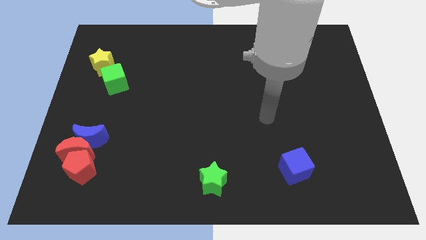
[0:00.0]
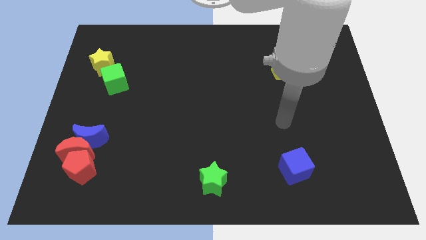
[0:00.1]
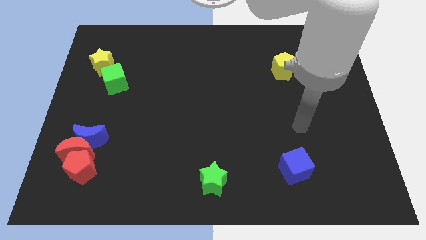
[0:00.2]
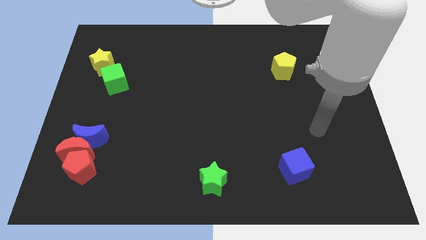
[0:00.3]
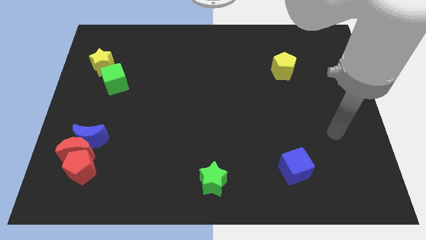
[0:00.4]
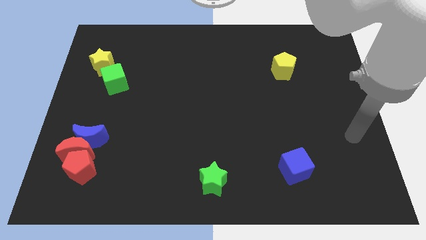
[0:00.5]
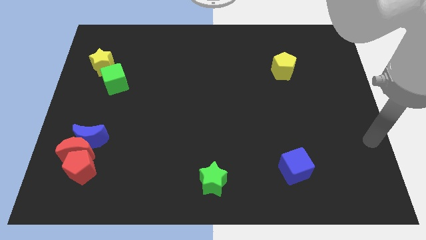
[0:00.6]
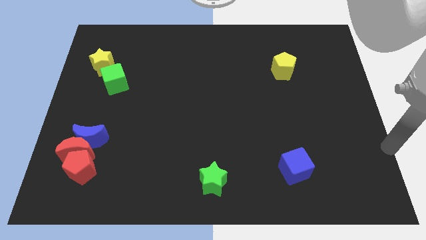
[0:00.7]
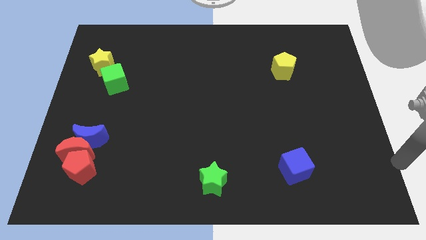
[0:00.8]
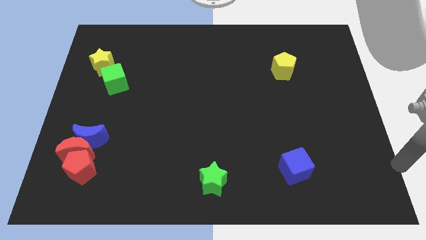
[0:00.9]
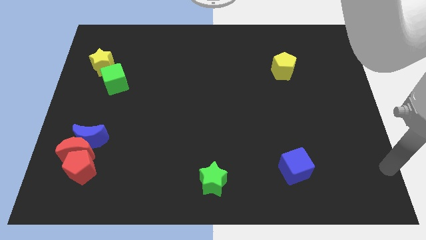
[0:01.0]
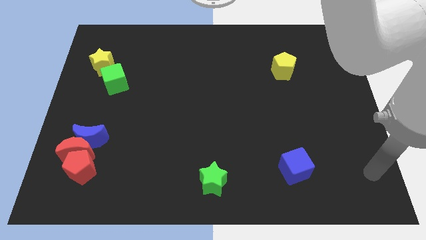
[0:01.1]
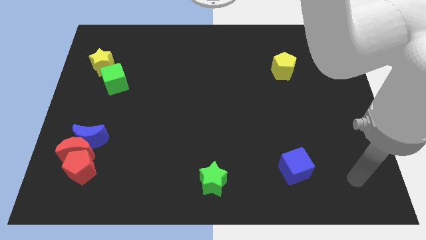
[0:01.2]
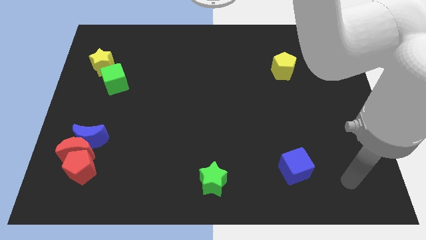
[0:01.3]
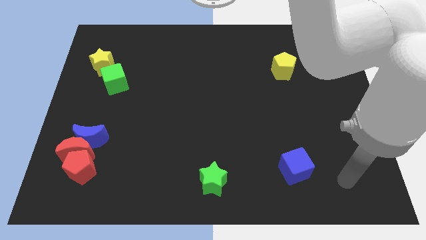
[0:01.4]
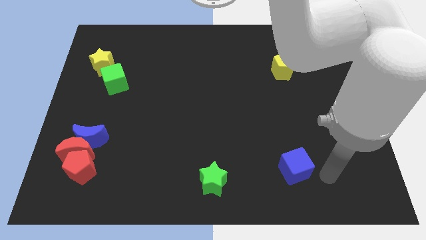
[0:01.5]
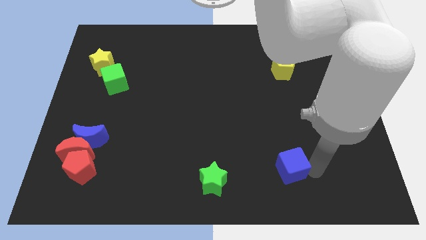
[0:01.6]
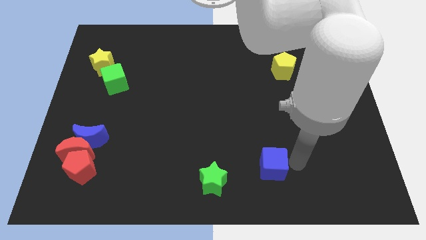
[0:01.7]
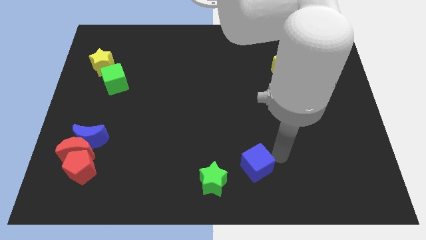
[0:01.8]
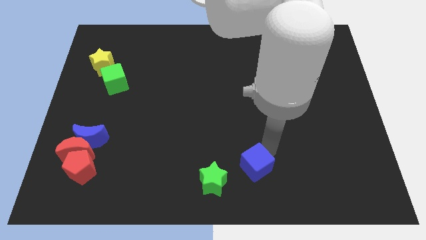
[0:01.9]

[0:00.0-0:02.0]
push the blue cube towards left

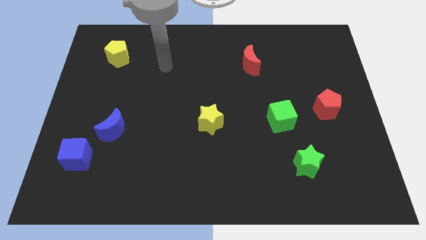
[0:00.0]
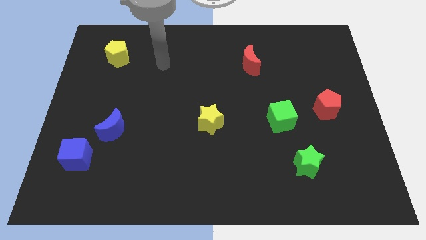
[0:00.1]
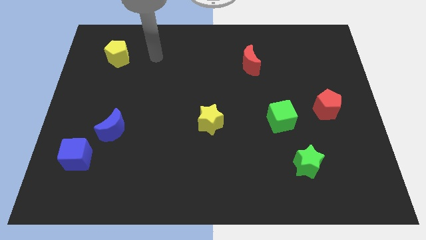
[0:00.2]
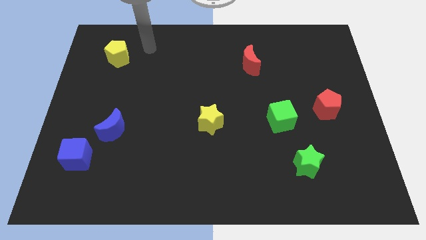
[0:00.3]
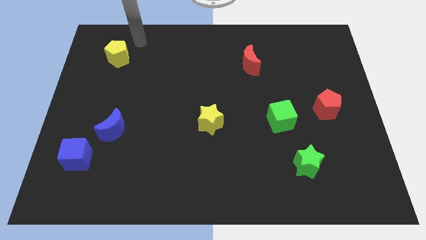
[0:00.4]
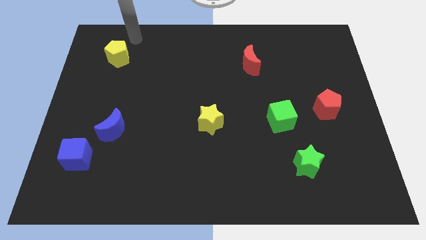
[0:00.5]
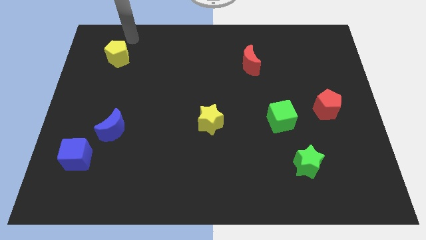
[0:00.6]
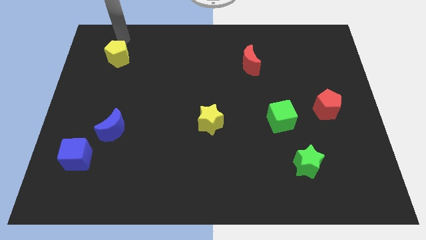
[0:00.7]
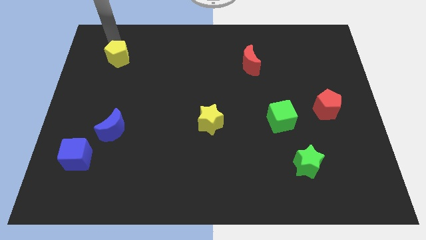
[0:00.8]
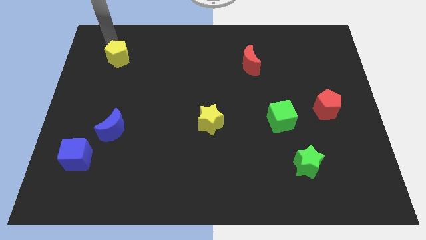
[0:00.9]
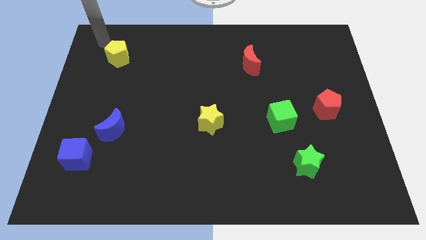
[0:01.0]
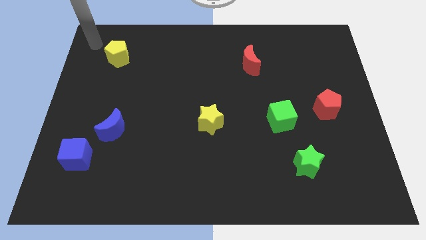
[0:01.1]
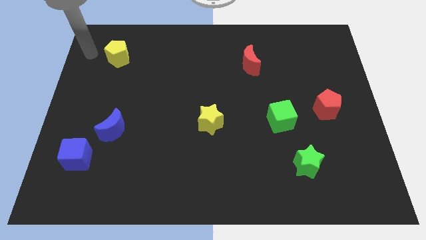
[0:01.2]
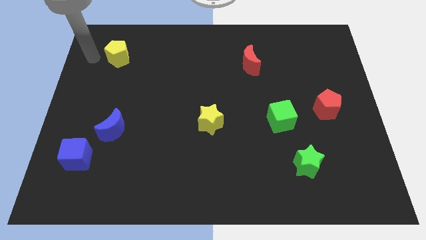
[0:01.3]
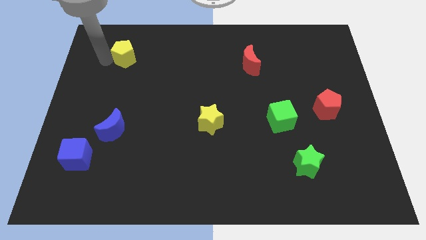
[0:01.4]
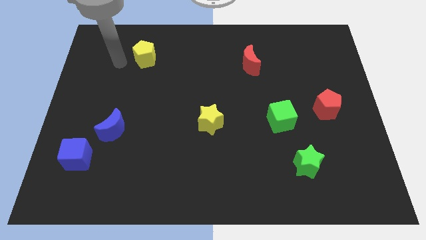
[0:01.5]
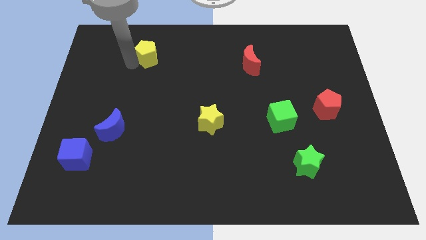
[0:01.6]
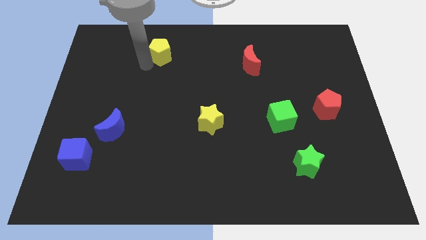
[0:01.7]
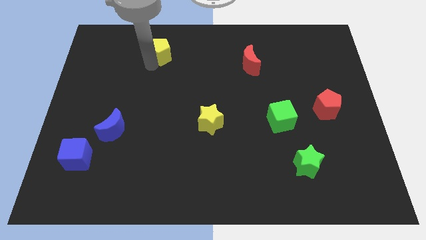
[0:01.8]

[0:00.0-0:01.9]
move the yellow pentagon slightly to the right side

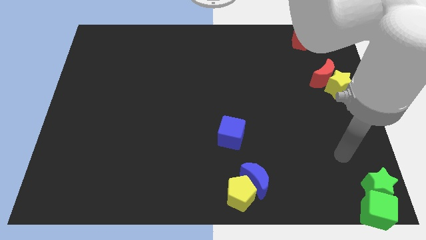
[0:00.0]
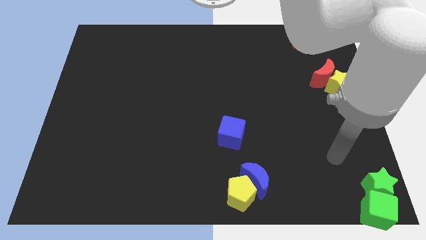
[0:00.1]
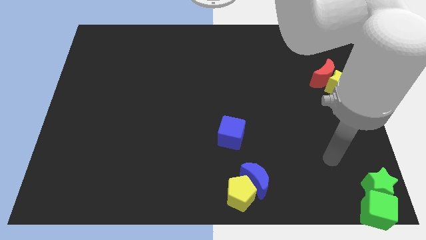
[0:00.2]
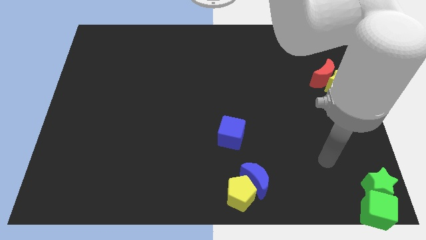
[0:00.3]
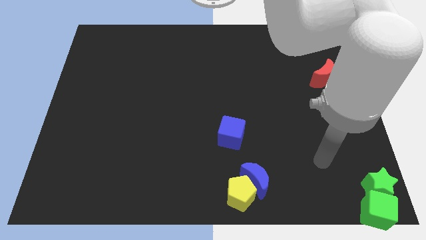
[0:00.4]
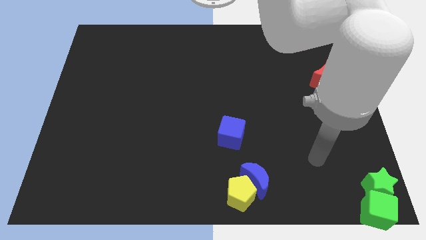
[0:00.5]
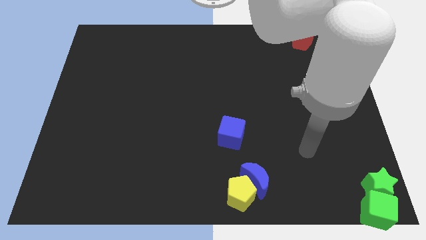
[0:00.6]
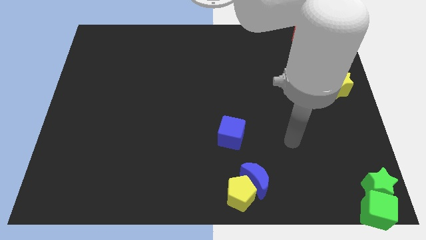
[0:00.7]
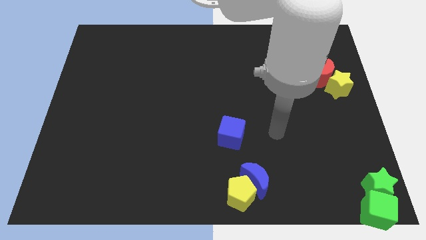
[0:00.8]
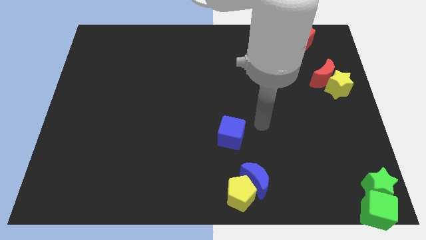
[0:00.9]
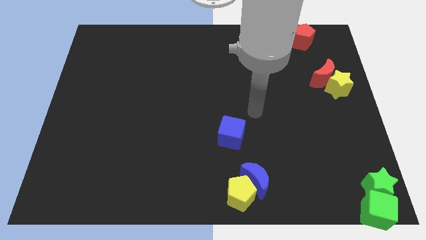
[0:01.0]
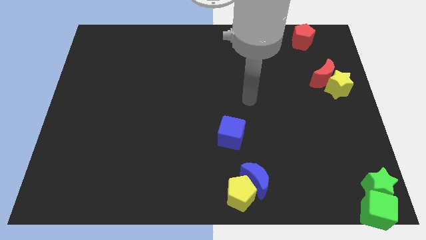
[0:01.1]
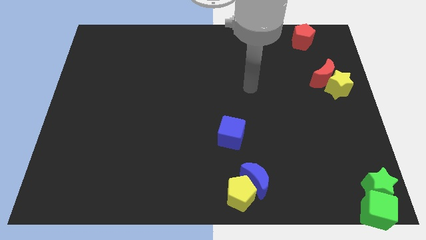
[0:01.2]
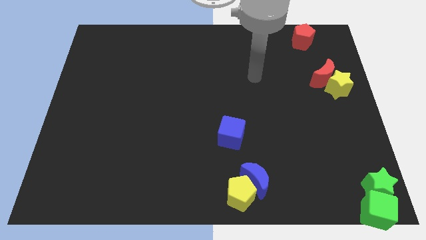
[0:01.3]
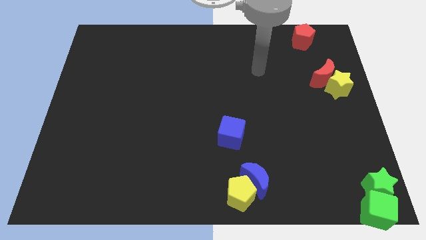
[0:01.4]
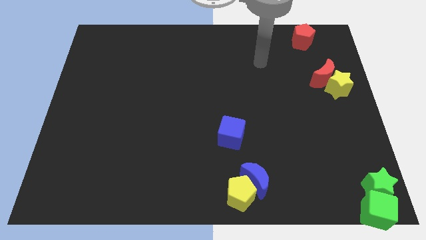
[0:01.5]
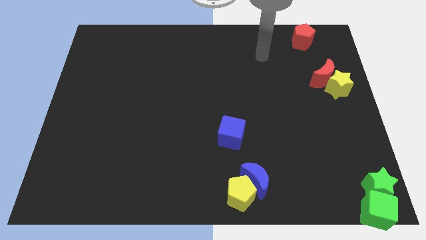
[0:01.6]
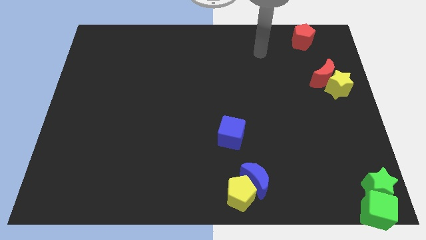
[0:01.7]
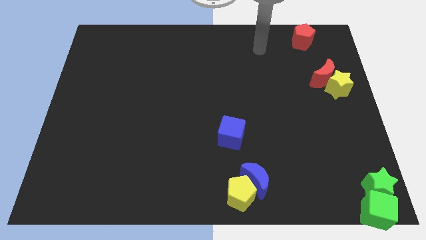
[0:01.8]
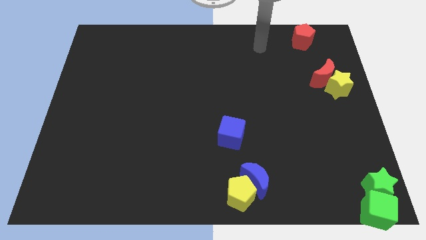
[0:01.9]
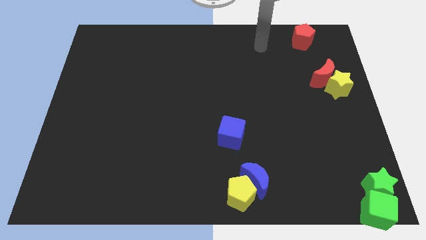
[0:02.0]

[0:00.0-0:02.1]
move your arm to the left of the red pentagon

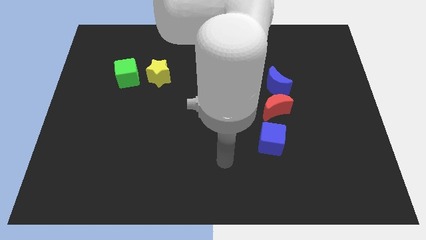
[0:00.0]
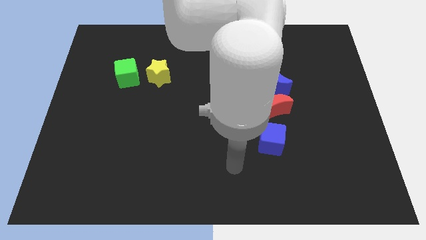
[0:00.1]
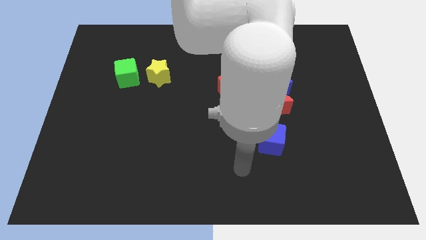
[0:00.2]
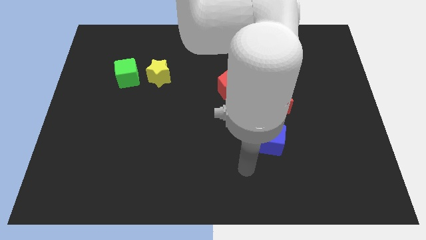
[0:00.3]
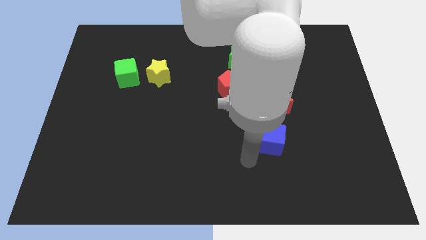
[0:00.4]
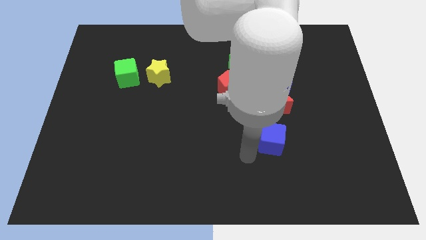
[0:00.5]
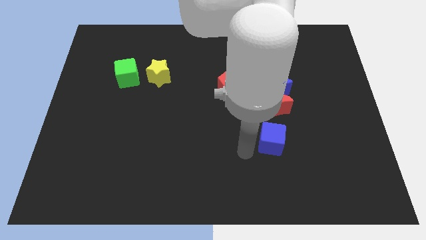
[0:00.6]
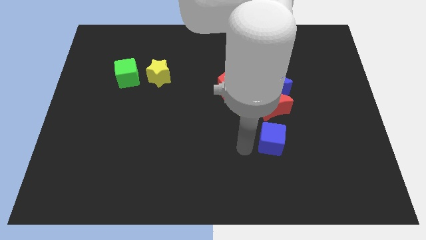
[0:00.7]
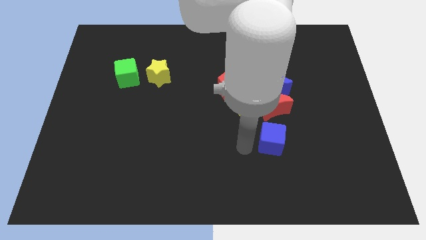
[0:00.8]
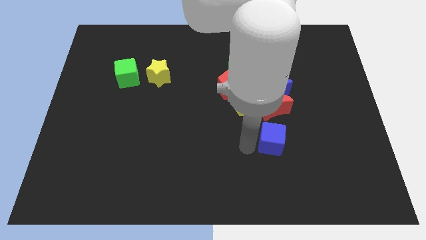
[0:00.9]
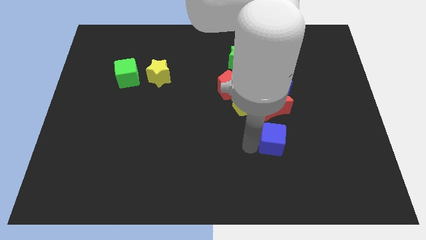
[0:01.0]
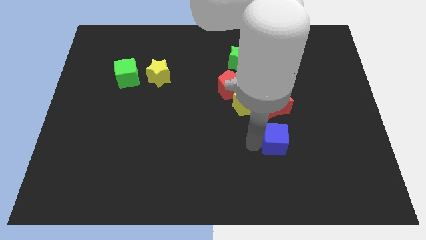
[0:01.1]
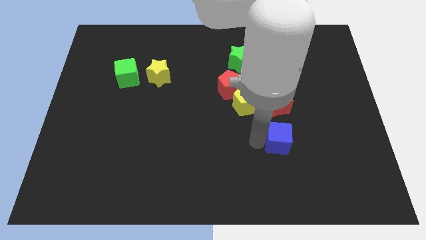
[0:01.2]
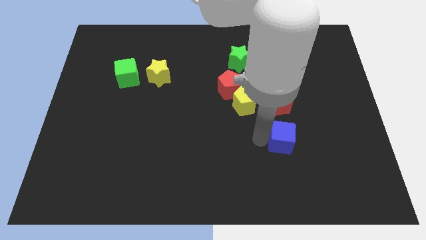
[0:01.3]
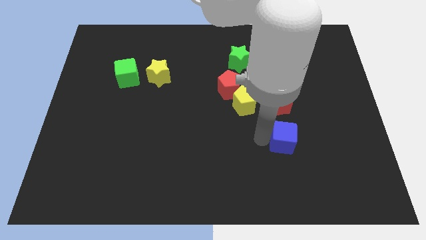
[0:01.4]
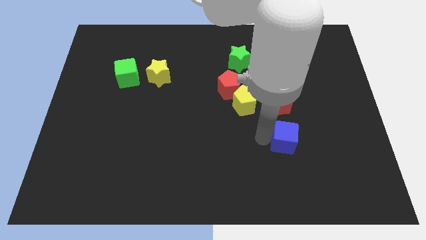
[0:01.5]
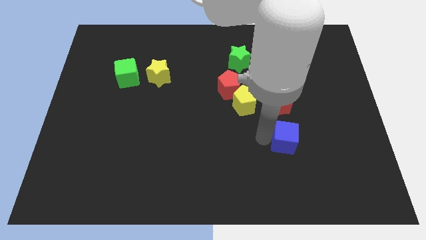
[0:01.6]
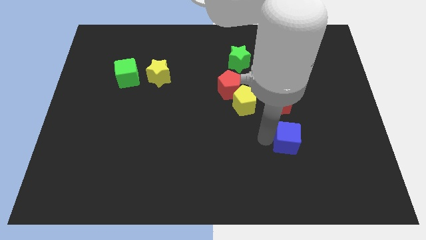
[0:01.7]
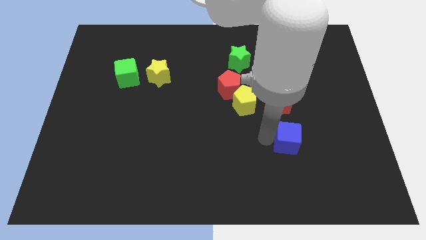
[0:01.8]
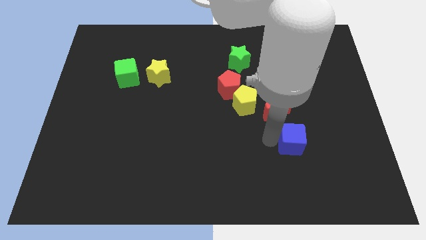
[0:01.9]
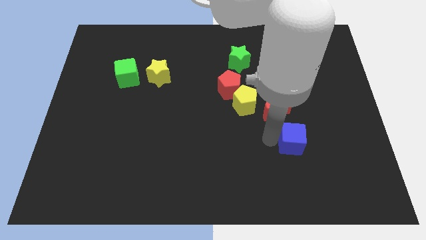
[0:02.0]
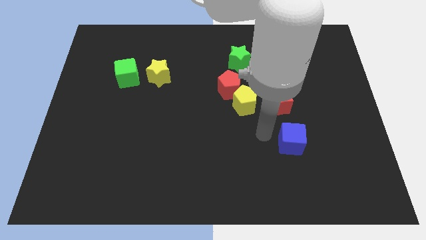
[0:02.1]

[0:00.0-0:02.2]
slightly push the blue cube to the right

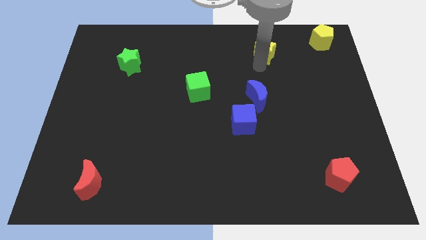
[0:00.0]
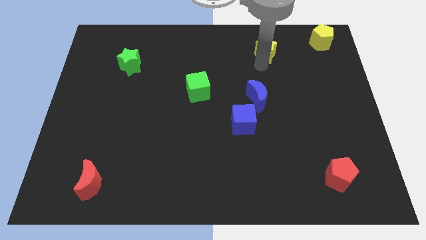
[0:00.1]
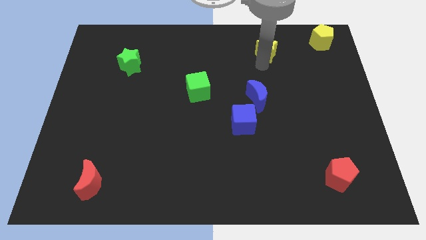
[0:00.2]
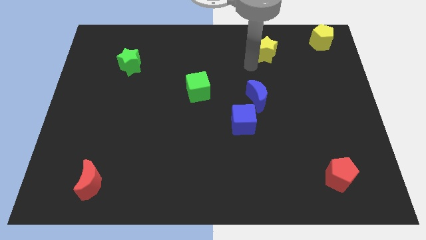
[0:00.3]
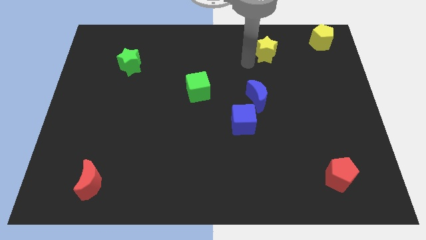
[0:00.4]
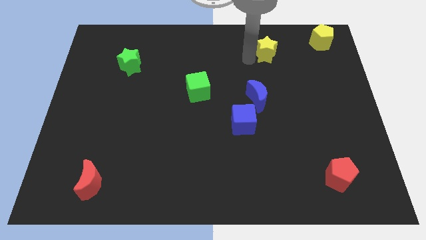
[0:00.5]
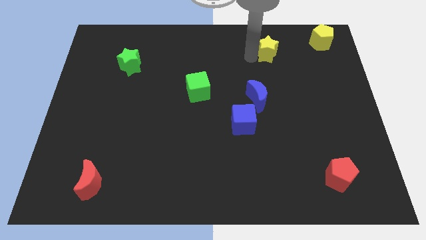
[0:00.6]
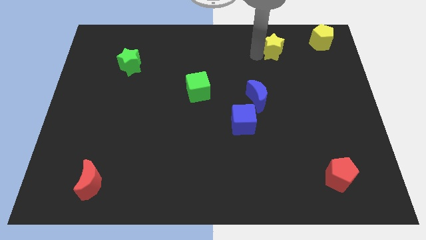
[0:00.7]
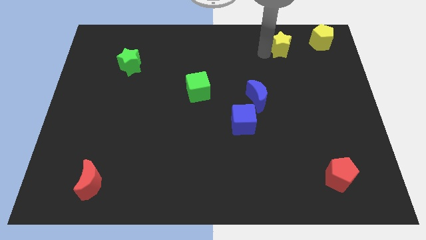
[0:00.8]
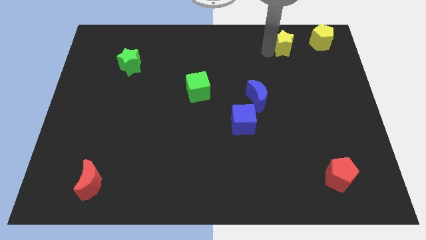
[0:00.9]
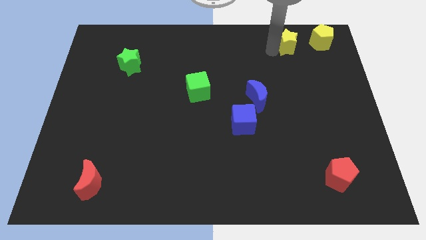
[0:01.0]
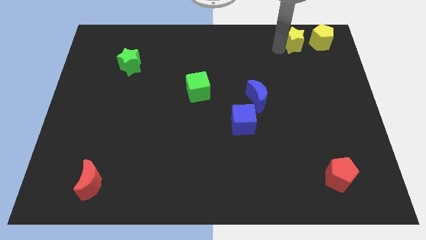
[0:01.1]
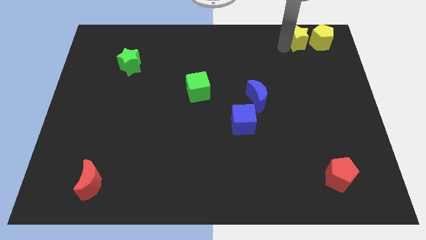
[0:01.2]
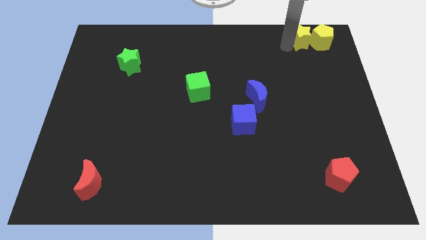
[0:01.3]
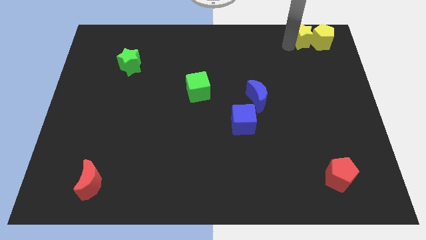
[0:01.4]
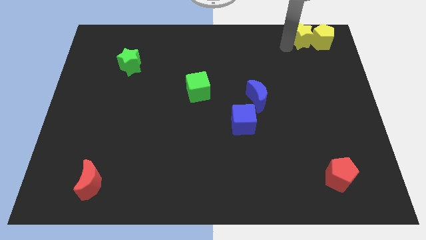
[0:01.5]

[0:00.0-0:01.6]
place yellow star to the left of yellow pentagon
